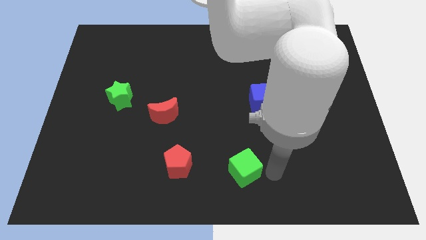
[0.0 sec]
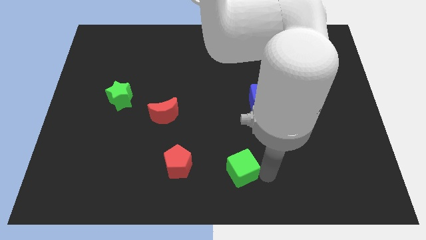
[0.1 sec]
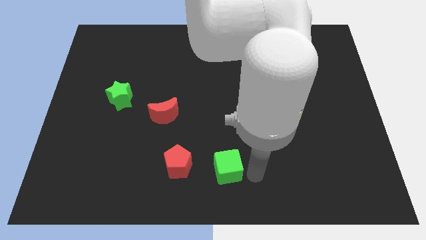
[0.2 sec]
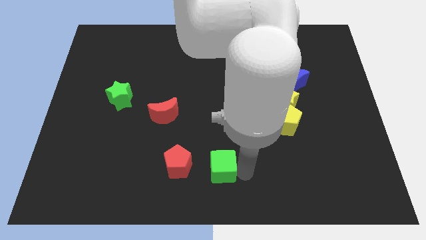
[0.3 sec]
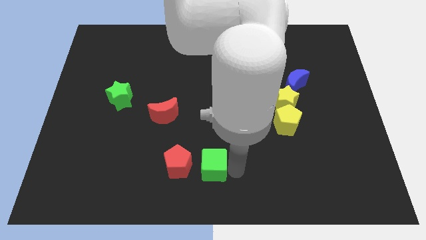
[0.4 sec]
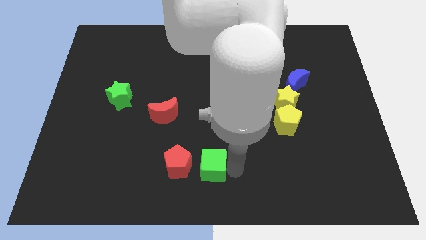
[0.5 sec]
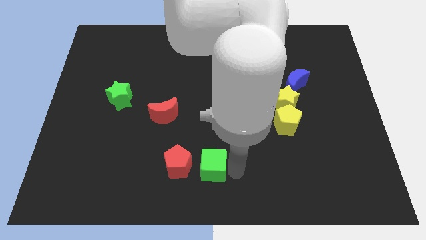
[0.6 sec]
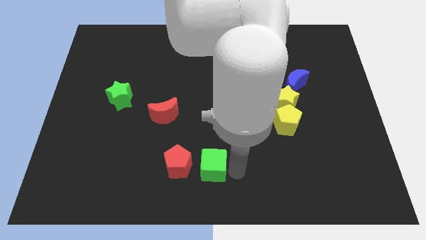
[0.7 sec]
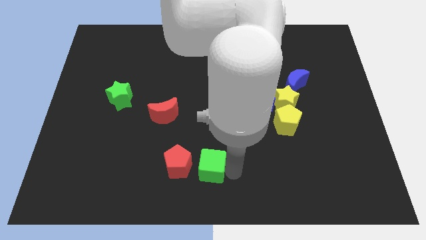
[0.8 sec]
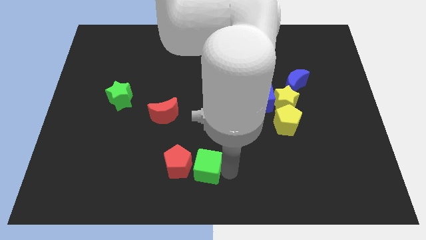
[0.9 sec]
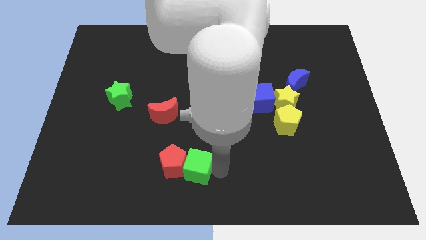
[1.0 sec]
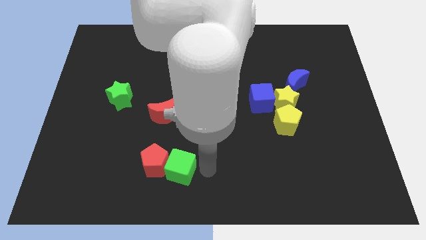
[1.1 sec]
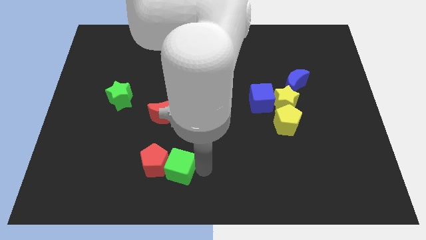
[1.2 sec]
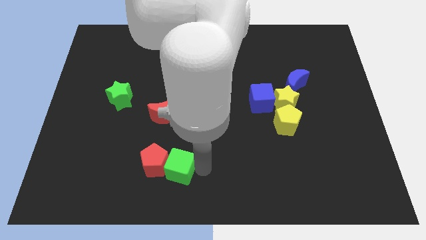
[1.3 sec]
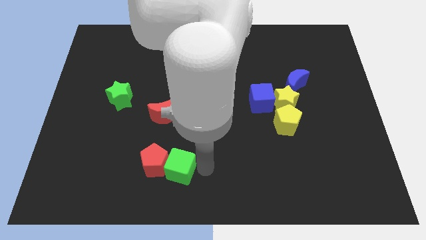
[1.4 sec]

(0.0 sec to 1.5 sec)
push the green cube into the right side of the red pentagon

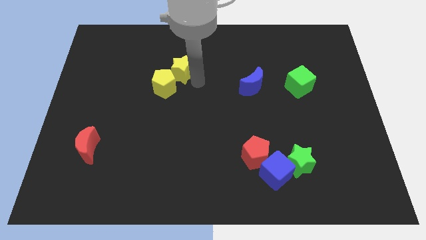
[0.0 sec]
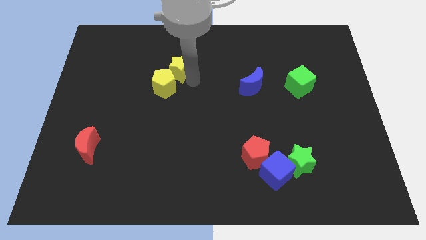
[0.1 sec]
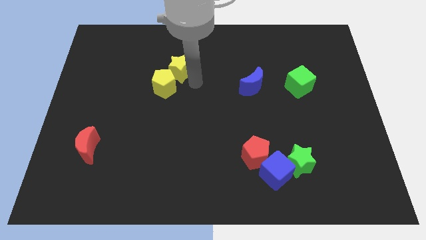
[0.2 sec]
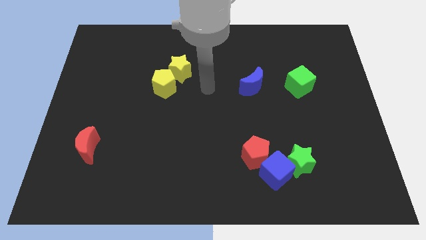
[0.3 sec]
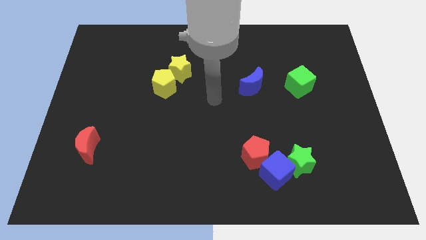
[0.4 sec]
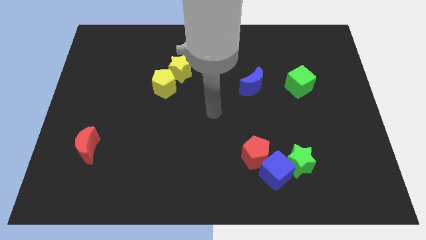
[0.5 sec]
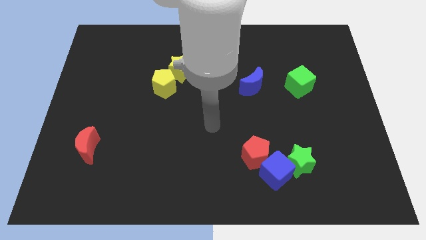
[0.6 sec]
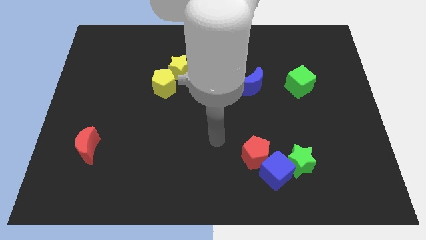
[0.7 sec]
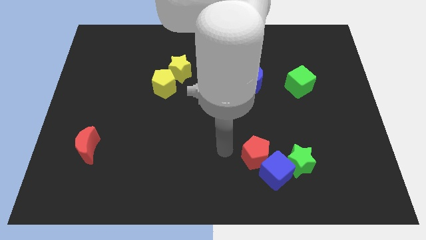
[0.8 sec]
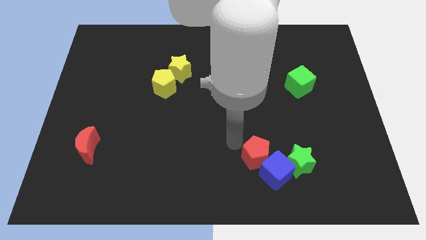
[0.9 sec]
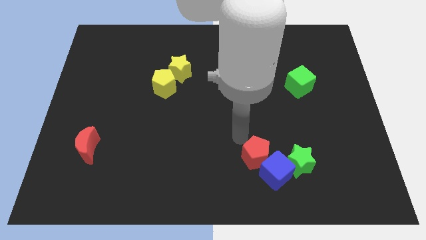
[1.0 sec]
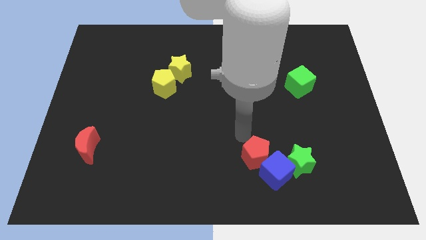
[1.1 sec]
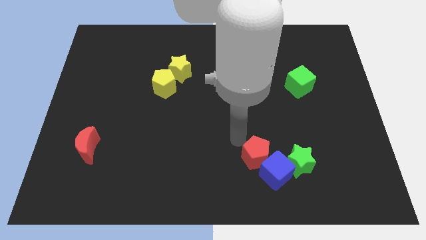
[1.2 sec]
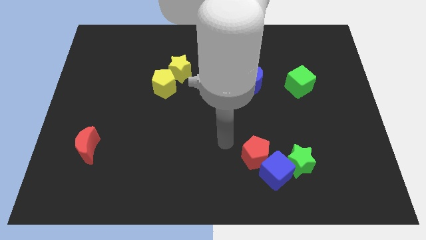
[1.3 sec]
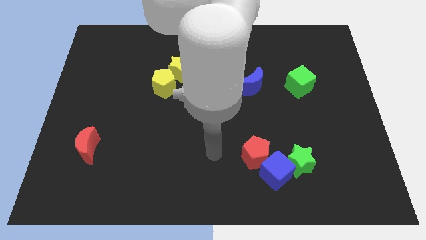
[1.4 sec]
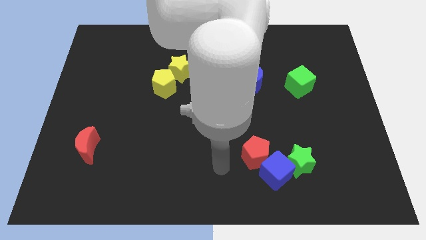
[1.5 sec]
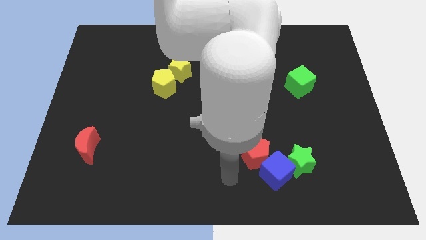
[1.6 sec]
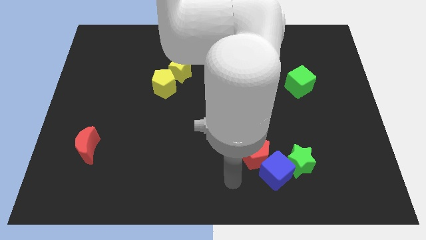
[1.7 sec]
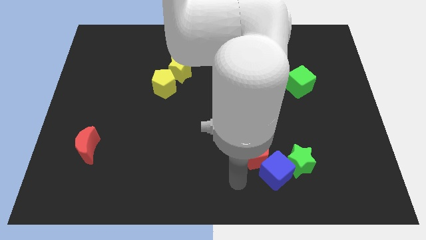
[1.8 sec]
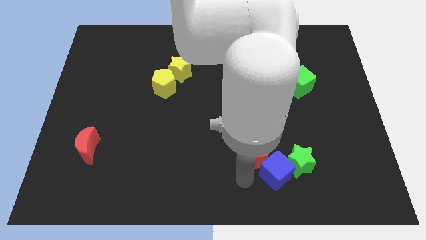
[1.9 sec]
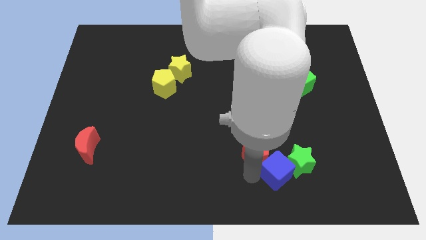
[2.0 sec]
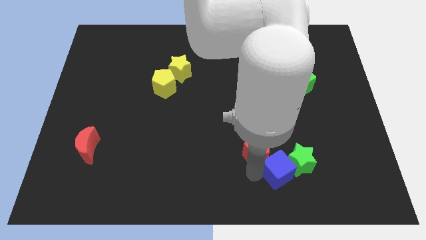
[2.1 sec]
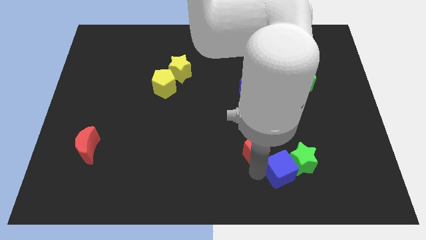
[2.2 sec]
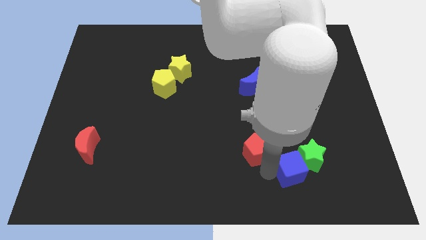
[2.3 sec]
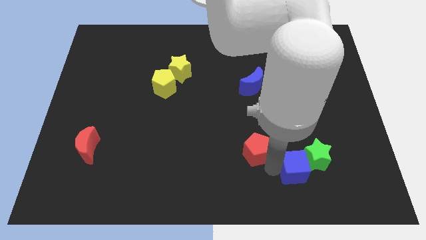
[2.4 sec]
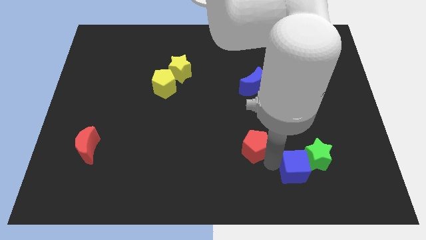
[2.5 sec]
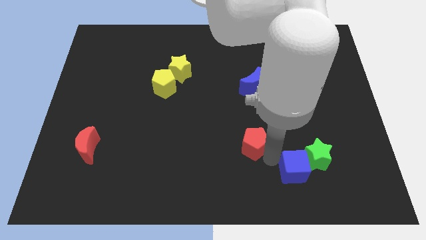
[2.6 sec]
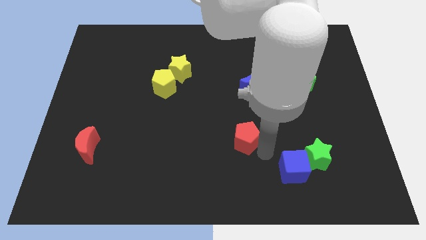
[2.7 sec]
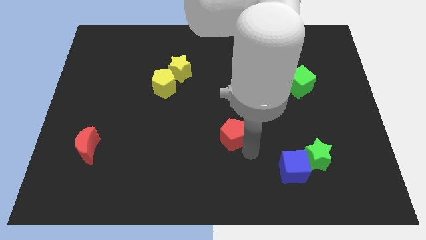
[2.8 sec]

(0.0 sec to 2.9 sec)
divide the red pentagon and blue cube

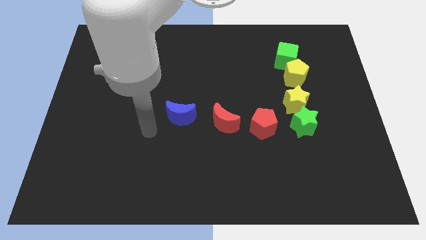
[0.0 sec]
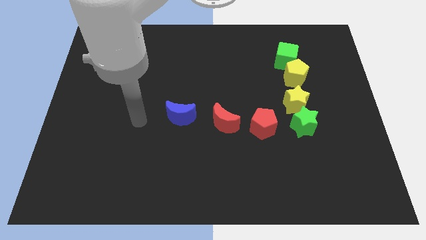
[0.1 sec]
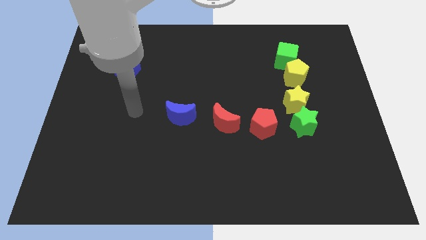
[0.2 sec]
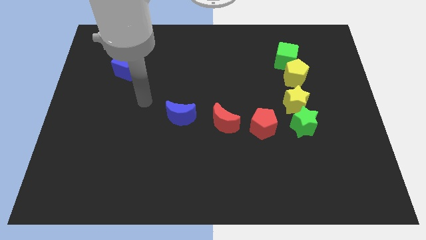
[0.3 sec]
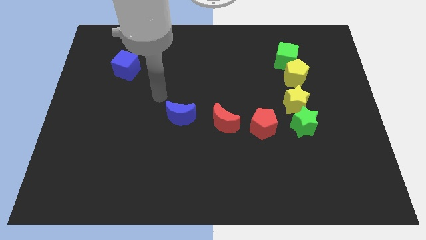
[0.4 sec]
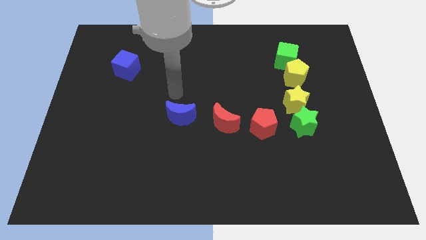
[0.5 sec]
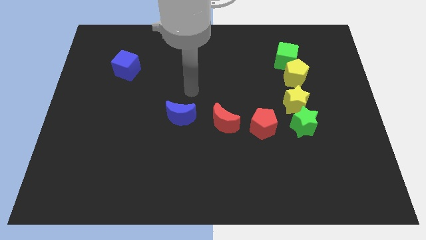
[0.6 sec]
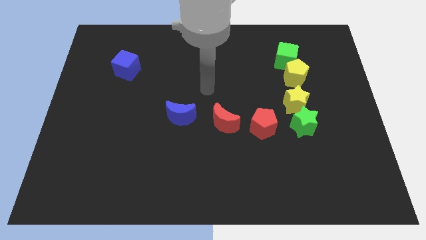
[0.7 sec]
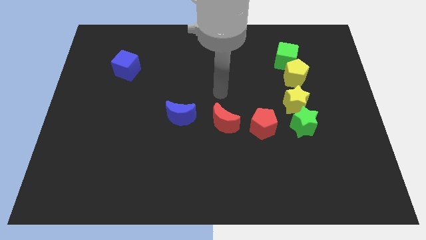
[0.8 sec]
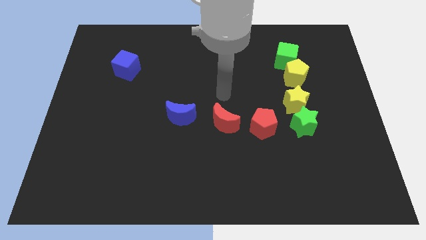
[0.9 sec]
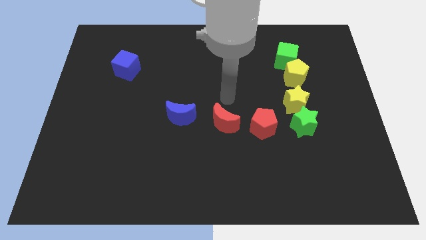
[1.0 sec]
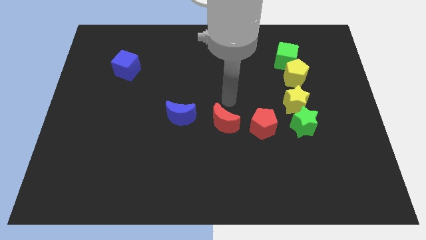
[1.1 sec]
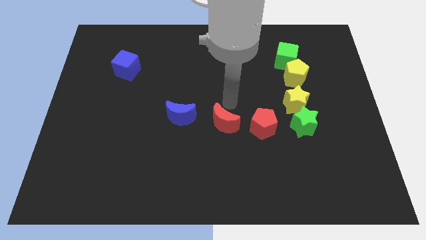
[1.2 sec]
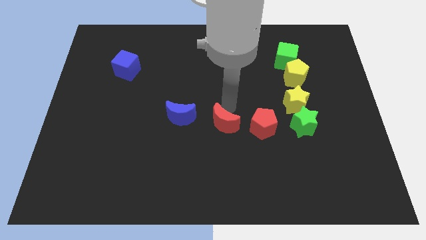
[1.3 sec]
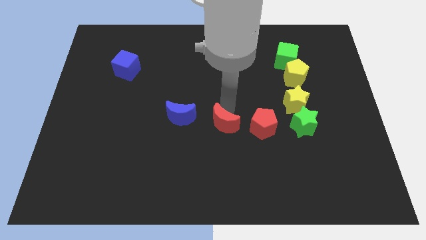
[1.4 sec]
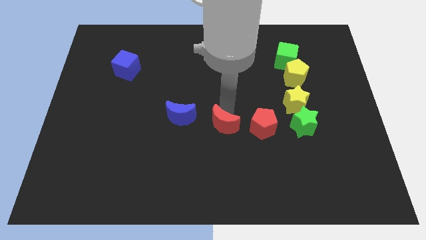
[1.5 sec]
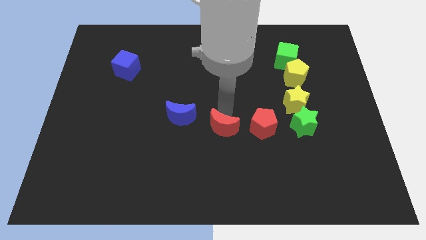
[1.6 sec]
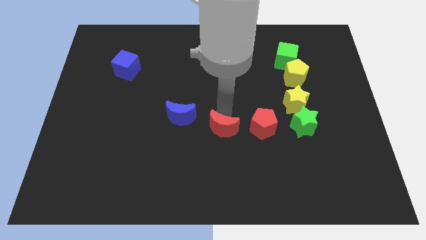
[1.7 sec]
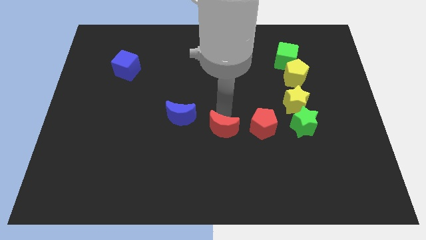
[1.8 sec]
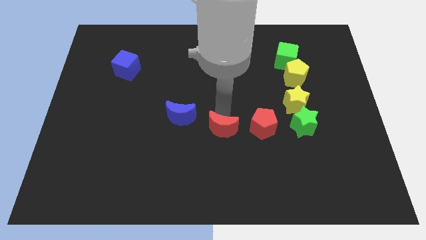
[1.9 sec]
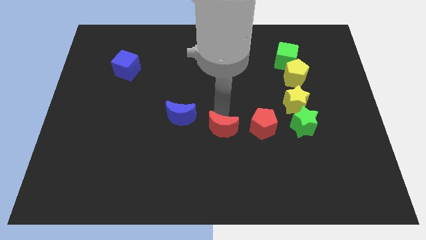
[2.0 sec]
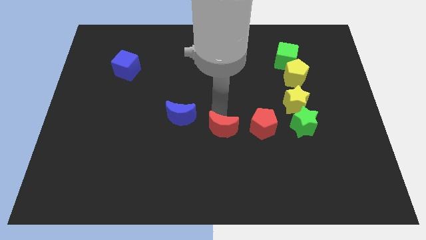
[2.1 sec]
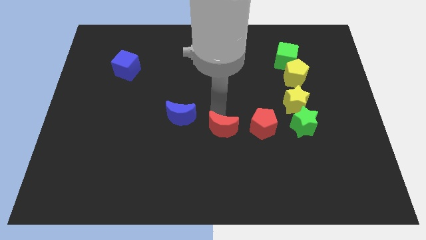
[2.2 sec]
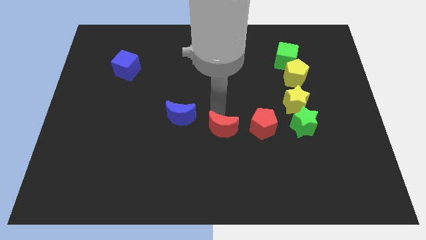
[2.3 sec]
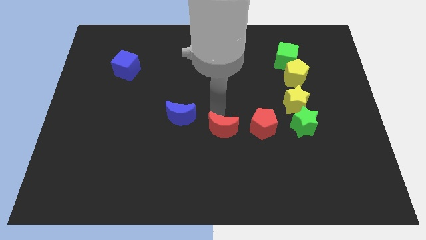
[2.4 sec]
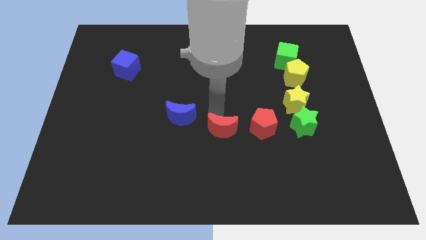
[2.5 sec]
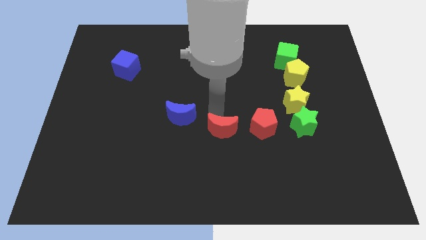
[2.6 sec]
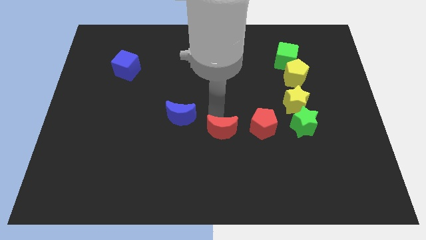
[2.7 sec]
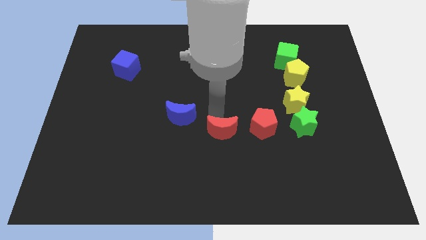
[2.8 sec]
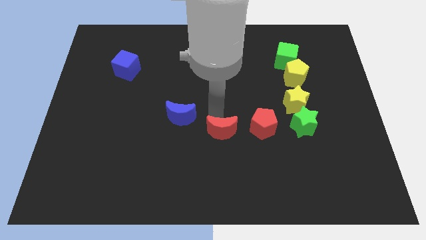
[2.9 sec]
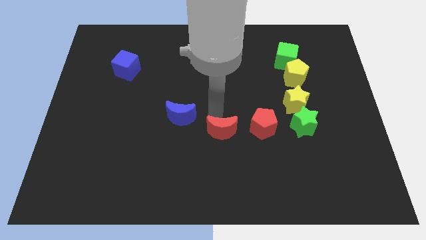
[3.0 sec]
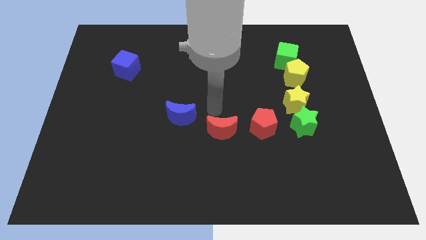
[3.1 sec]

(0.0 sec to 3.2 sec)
slightly move the red moon down

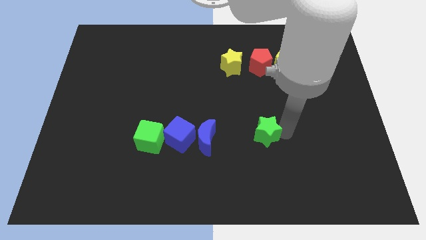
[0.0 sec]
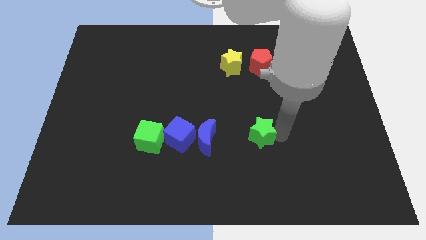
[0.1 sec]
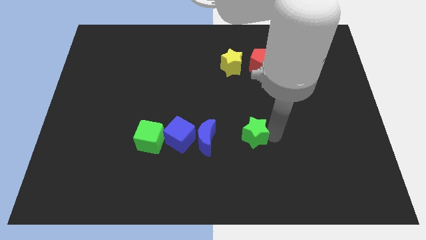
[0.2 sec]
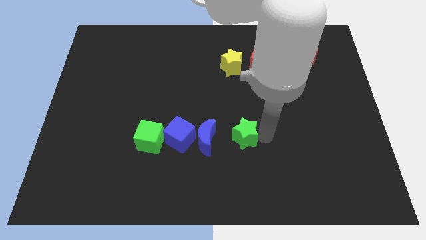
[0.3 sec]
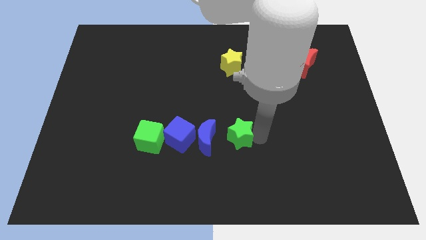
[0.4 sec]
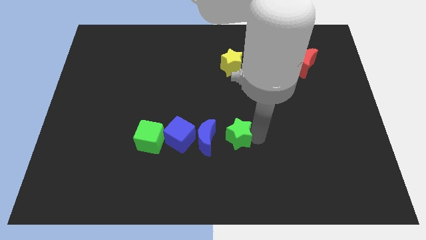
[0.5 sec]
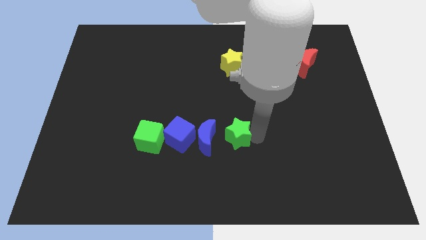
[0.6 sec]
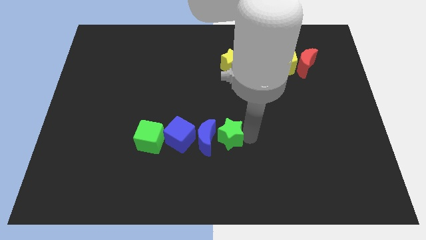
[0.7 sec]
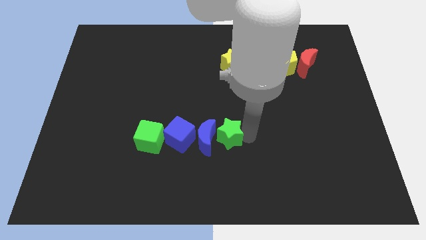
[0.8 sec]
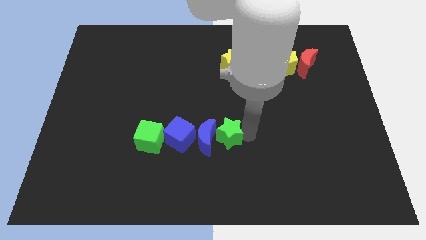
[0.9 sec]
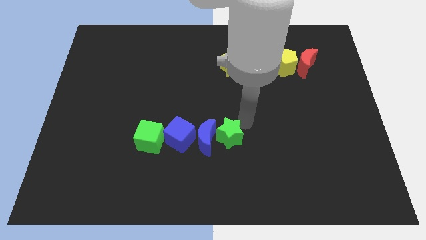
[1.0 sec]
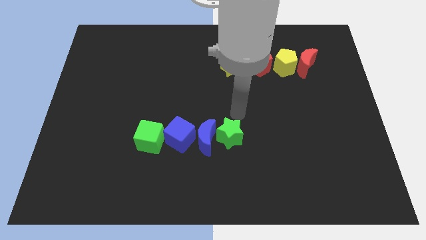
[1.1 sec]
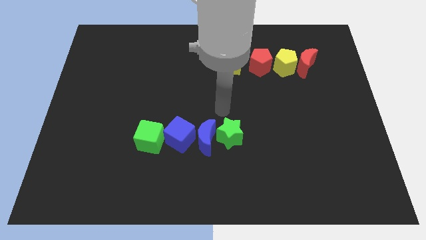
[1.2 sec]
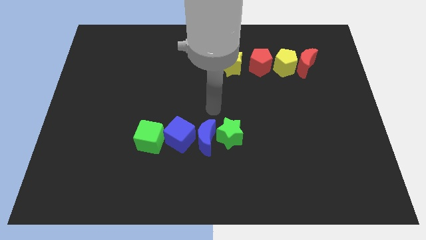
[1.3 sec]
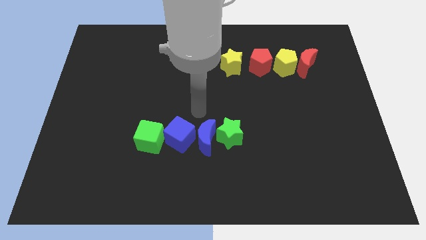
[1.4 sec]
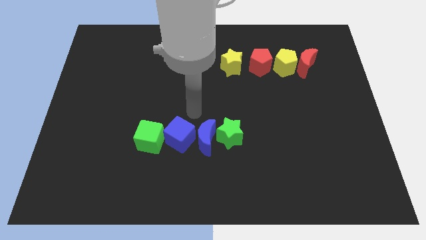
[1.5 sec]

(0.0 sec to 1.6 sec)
push the green star slightly towards the left side
